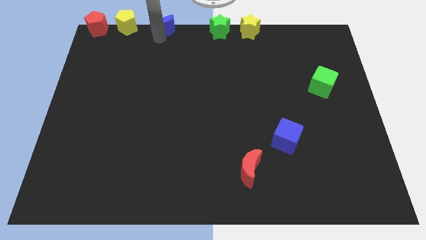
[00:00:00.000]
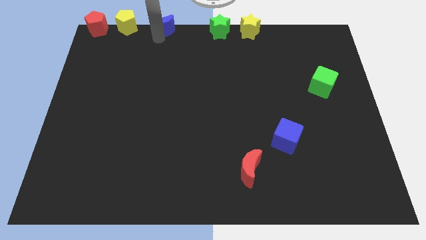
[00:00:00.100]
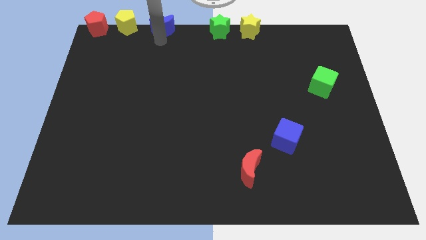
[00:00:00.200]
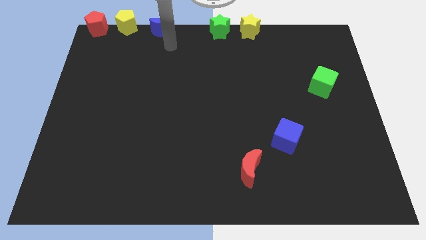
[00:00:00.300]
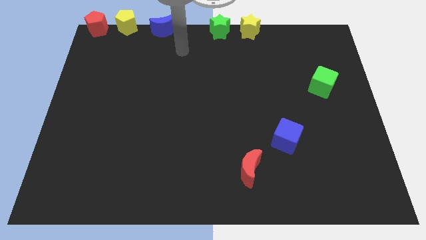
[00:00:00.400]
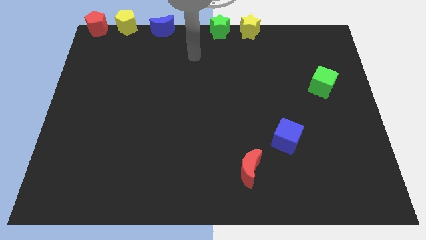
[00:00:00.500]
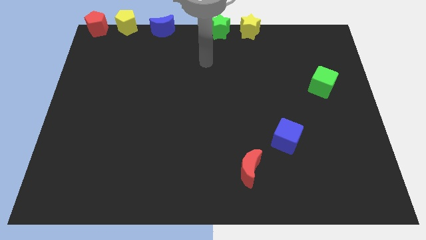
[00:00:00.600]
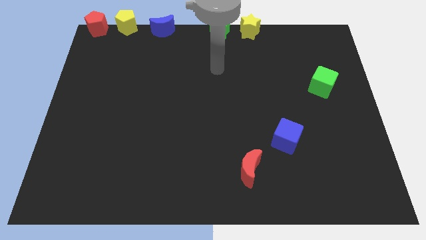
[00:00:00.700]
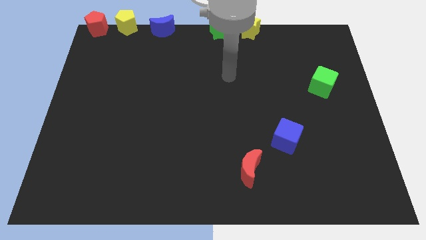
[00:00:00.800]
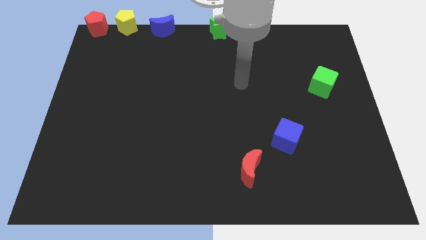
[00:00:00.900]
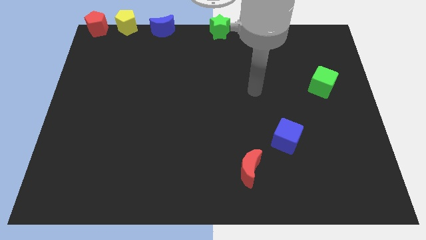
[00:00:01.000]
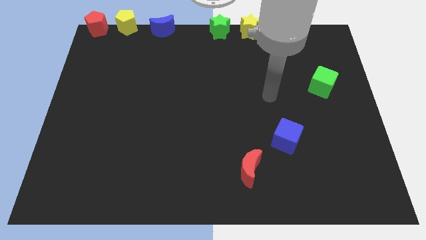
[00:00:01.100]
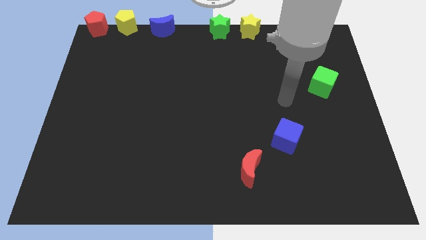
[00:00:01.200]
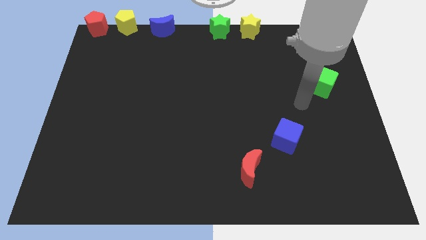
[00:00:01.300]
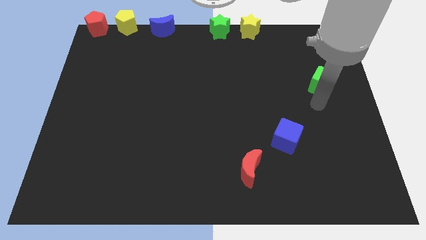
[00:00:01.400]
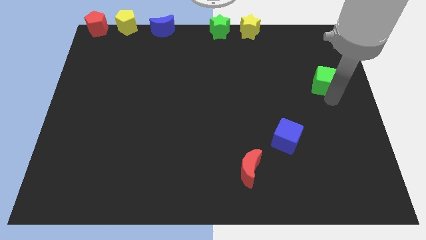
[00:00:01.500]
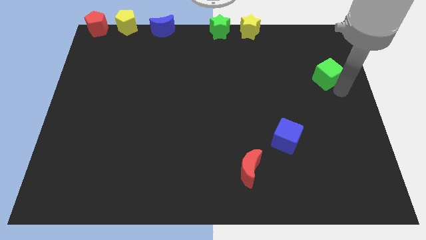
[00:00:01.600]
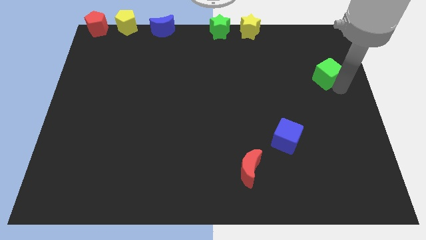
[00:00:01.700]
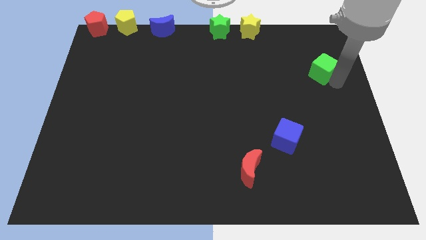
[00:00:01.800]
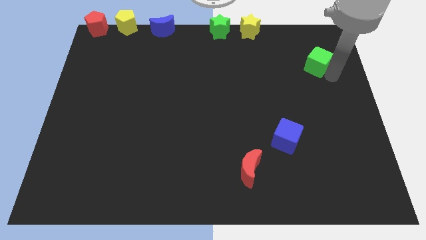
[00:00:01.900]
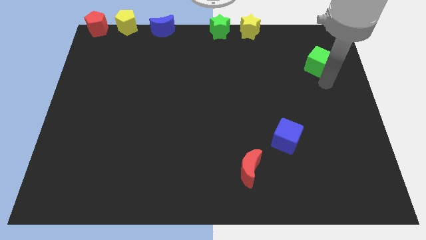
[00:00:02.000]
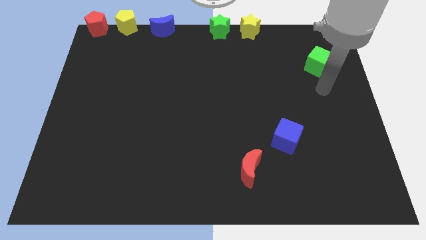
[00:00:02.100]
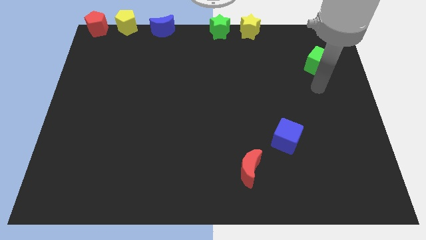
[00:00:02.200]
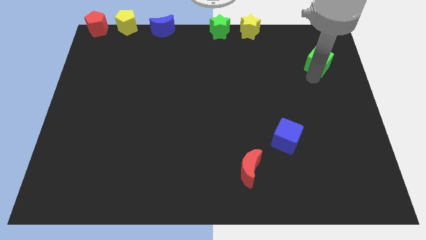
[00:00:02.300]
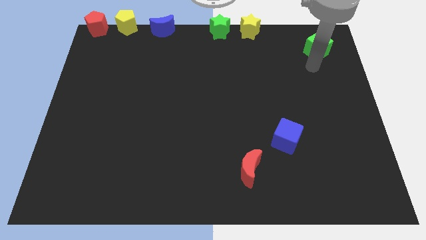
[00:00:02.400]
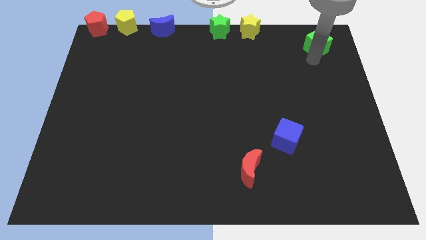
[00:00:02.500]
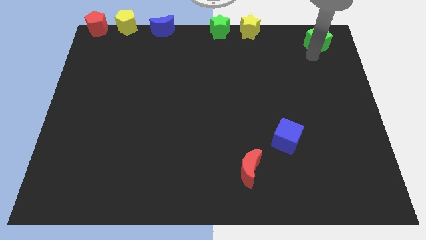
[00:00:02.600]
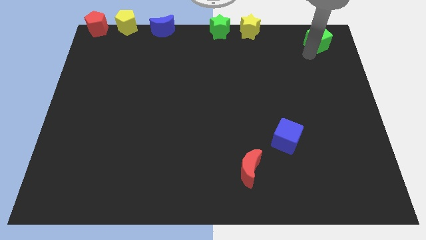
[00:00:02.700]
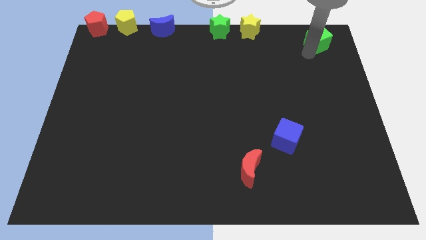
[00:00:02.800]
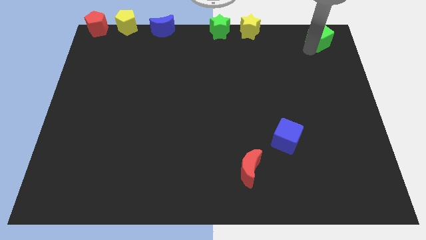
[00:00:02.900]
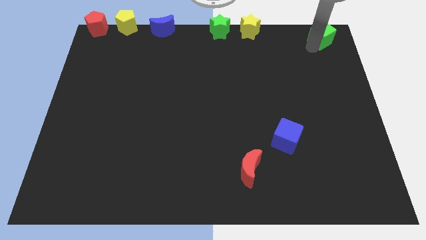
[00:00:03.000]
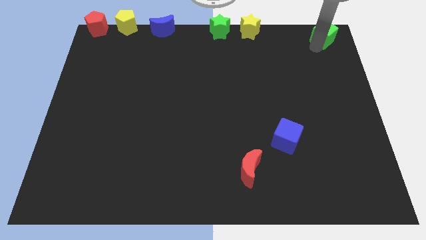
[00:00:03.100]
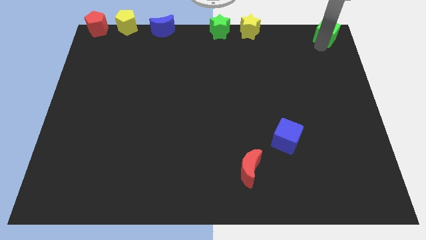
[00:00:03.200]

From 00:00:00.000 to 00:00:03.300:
push green cube towards top right side of the board

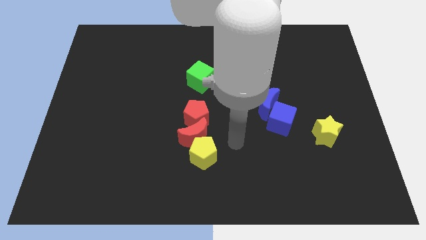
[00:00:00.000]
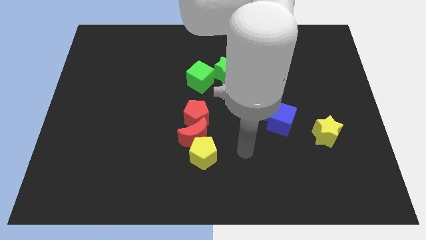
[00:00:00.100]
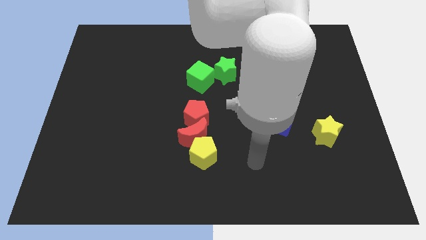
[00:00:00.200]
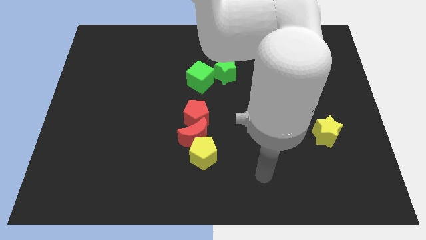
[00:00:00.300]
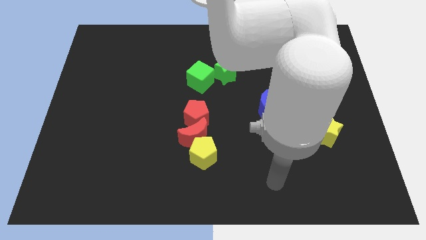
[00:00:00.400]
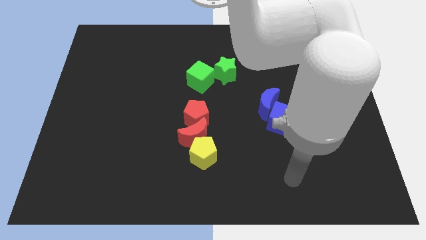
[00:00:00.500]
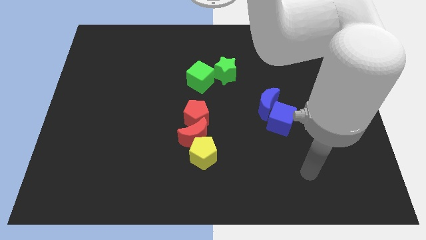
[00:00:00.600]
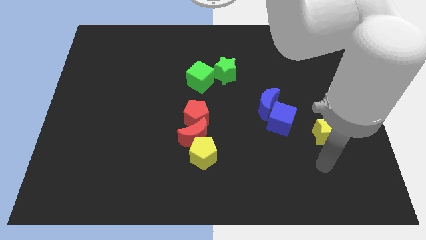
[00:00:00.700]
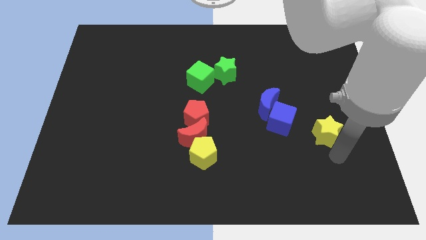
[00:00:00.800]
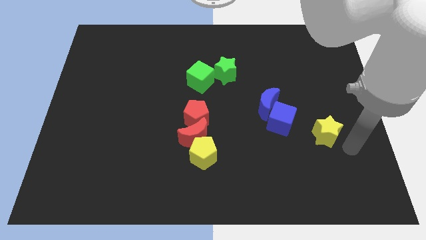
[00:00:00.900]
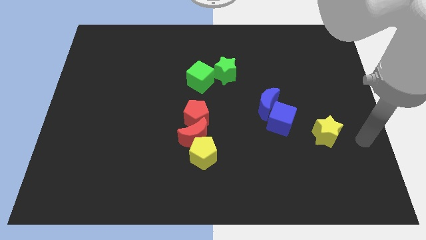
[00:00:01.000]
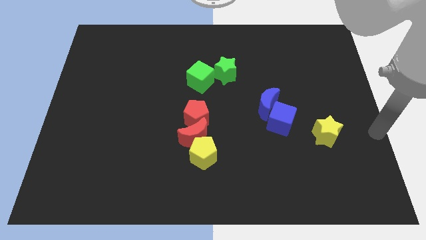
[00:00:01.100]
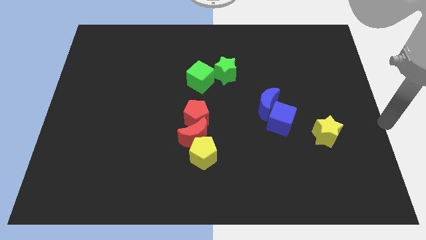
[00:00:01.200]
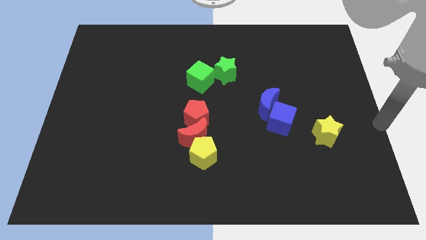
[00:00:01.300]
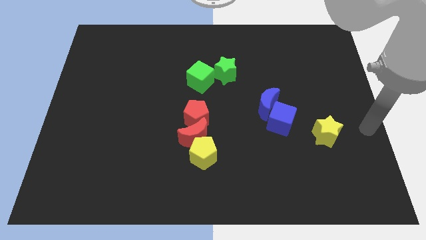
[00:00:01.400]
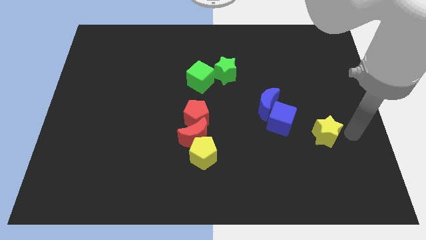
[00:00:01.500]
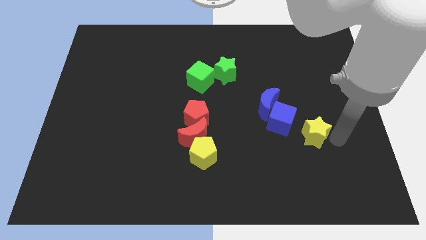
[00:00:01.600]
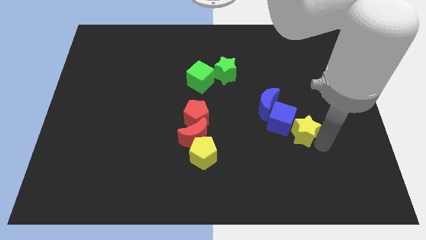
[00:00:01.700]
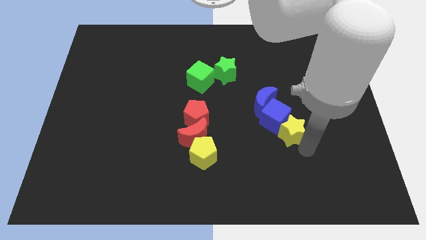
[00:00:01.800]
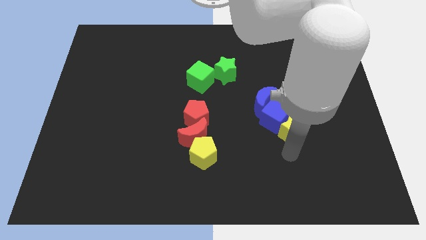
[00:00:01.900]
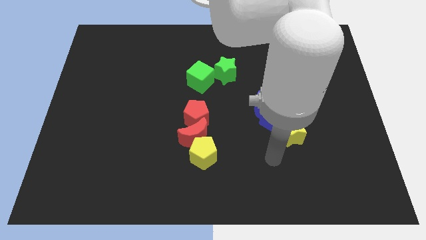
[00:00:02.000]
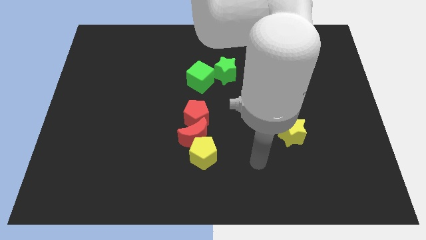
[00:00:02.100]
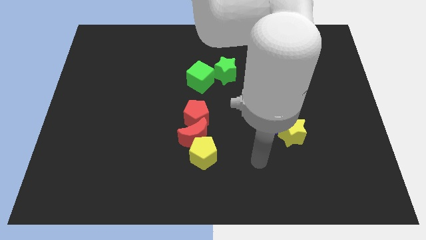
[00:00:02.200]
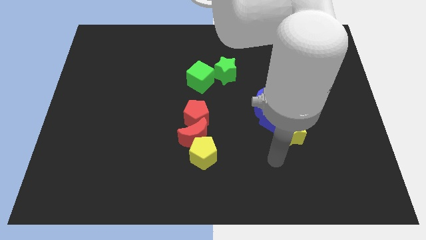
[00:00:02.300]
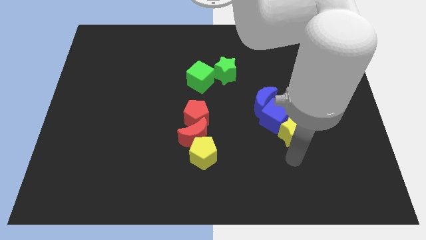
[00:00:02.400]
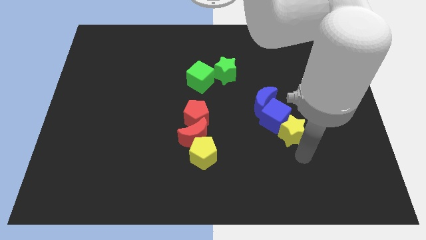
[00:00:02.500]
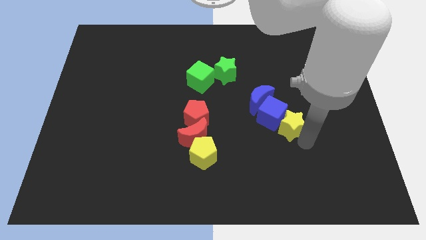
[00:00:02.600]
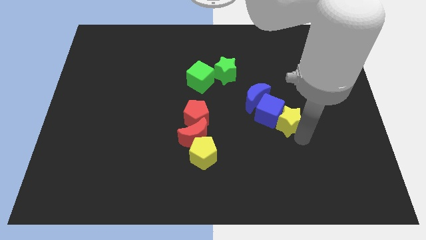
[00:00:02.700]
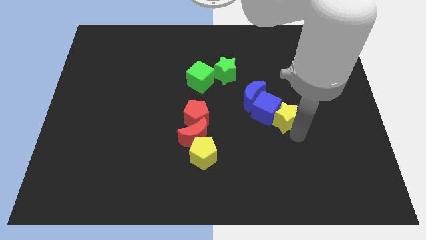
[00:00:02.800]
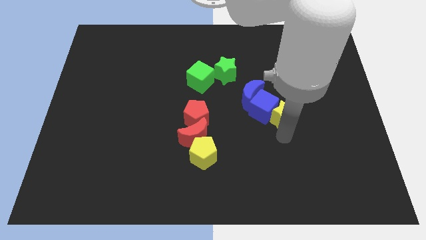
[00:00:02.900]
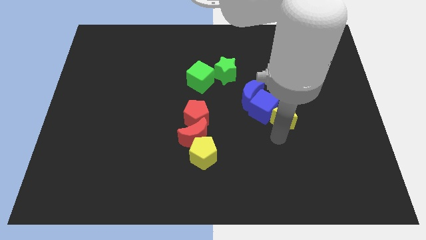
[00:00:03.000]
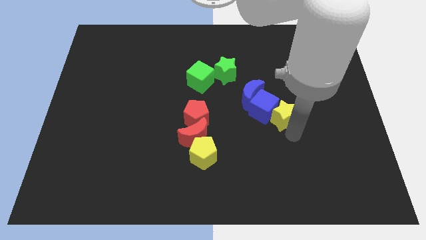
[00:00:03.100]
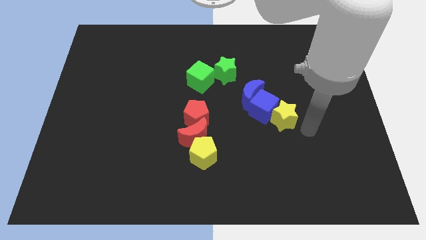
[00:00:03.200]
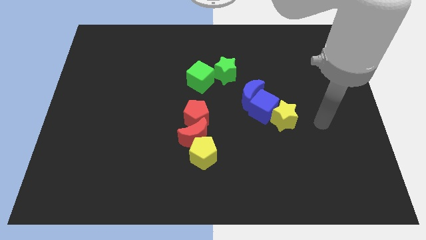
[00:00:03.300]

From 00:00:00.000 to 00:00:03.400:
push yellow star into the blue cube

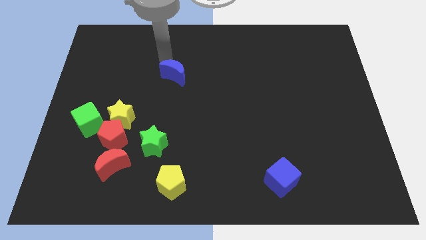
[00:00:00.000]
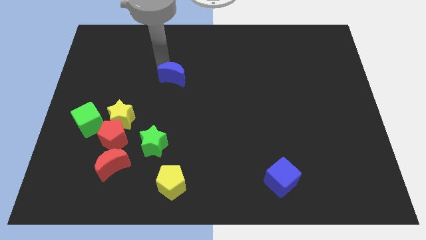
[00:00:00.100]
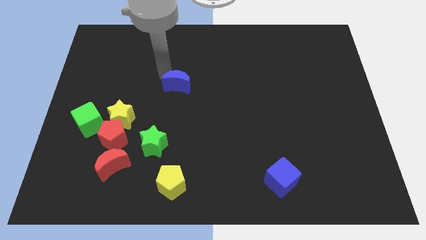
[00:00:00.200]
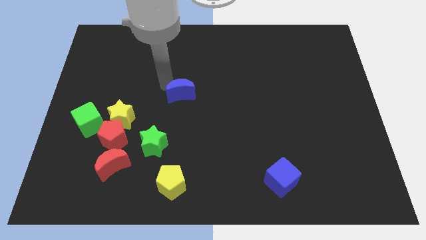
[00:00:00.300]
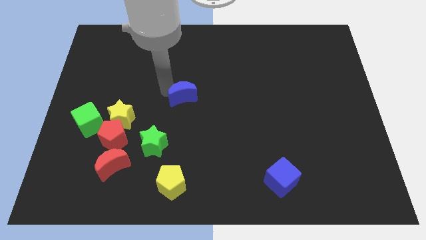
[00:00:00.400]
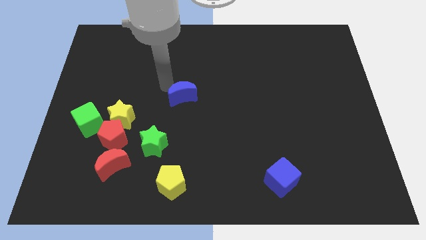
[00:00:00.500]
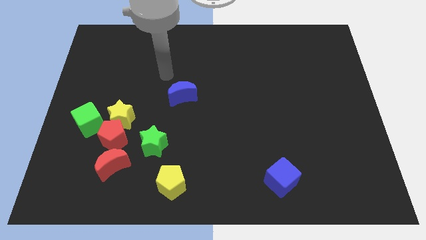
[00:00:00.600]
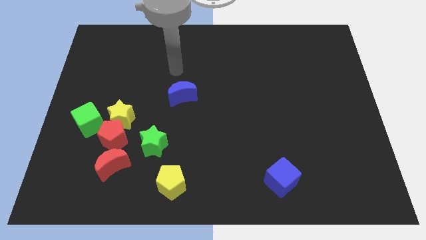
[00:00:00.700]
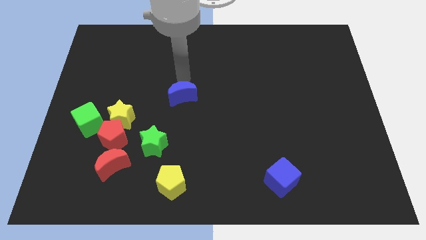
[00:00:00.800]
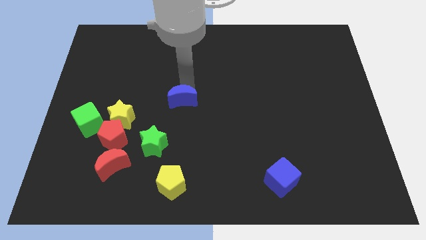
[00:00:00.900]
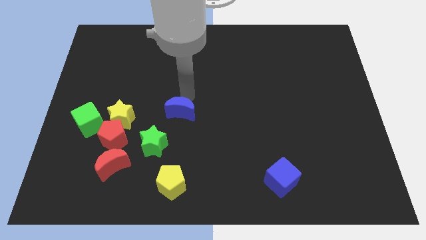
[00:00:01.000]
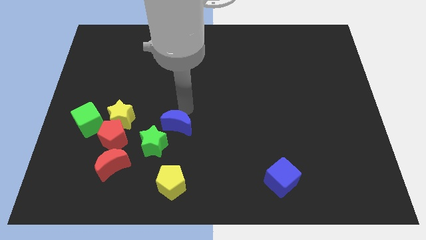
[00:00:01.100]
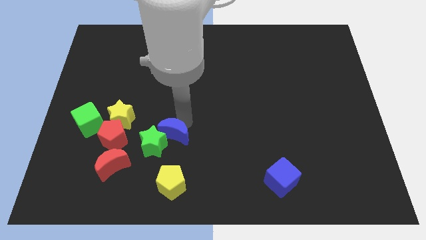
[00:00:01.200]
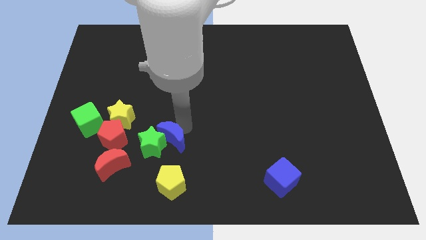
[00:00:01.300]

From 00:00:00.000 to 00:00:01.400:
move blue crescent to the top right of the green star

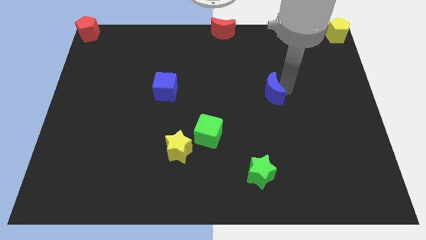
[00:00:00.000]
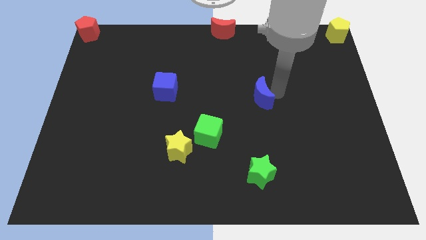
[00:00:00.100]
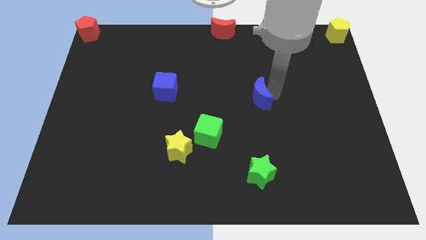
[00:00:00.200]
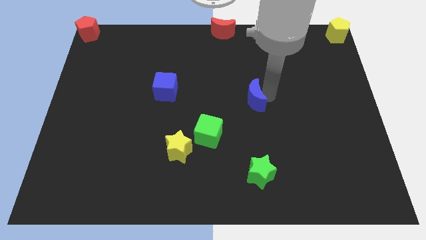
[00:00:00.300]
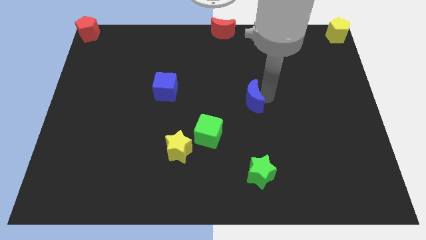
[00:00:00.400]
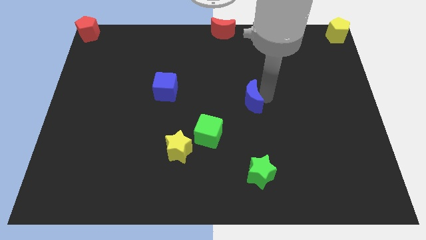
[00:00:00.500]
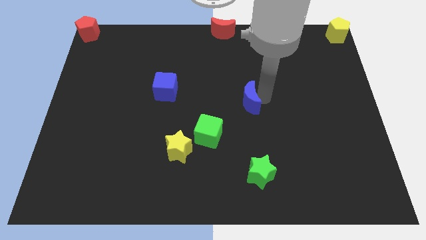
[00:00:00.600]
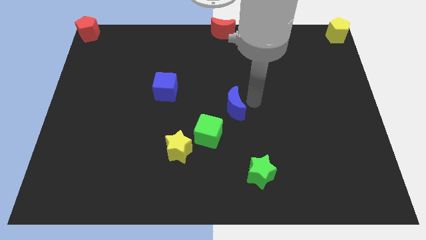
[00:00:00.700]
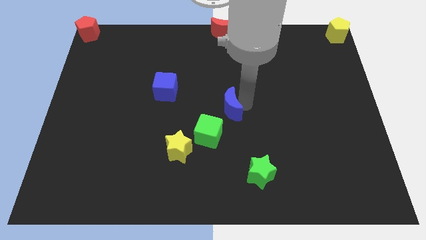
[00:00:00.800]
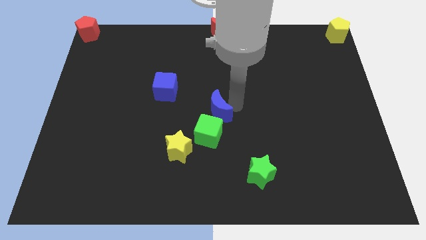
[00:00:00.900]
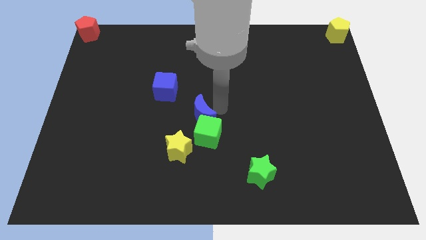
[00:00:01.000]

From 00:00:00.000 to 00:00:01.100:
push the blue crescent to the top of the green cube
